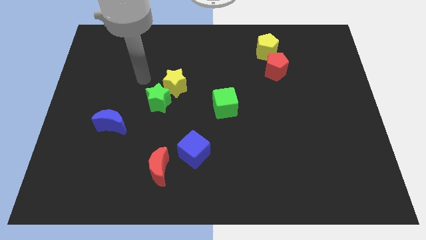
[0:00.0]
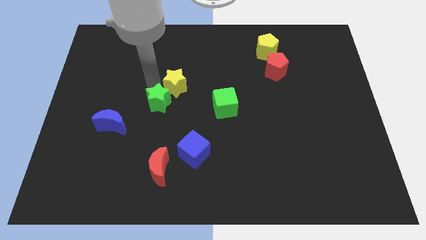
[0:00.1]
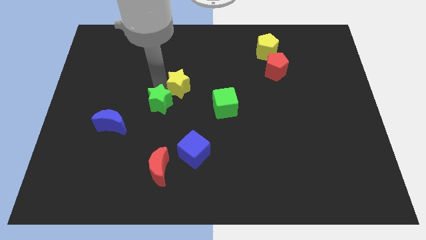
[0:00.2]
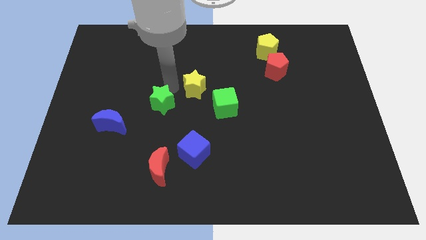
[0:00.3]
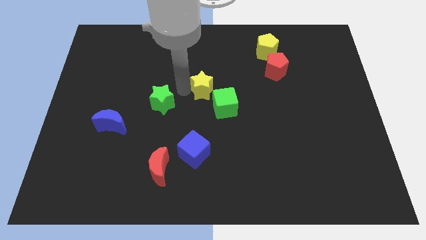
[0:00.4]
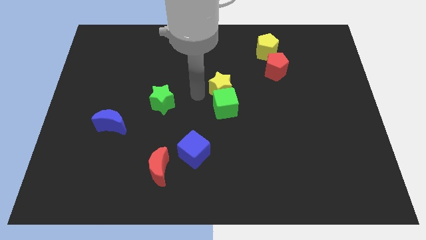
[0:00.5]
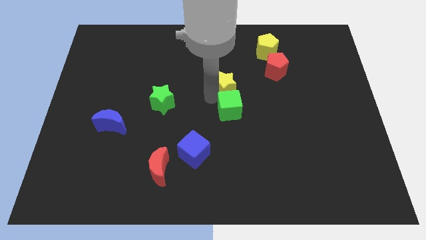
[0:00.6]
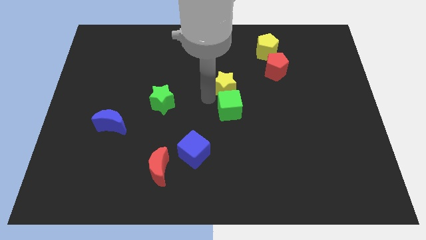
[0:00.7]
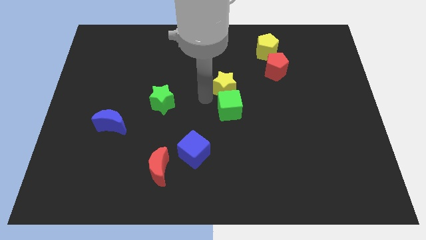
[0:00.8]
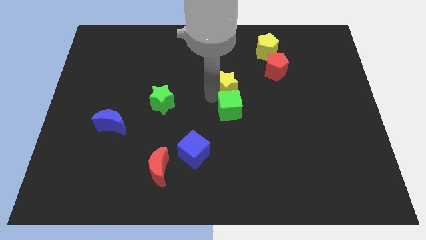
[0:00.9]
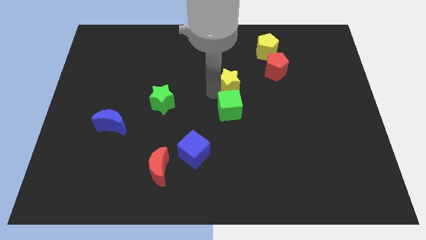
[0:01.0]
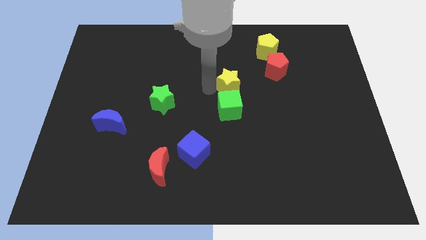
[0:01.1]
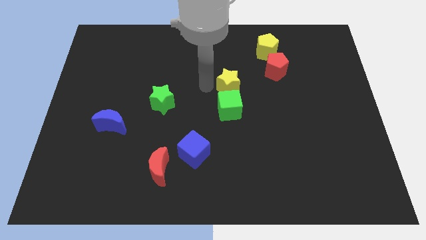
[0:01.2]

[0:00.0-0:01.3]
move the yellow star to the top side of the green cube

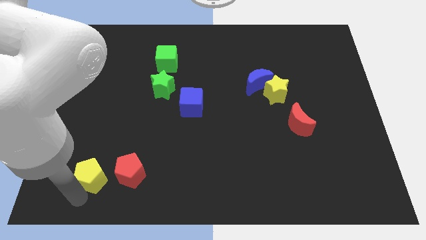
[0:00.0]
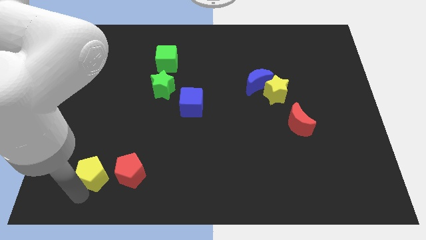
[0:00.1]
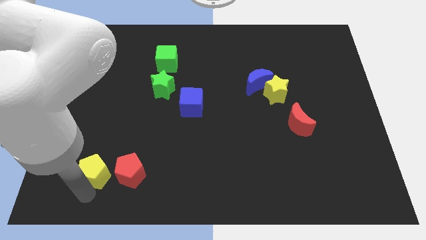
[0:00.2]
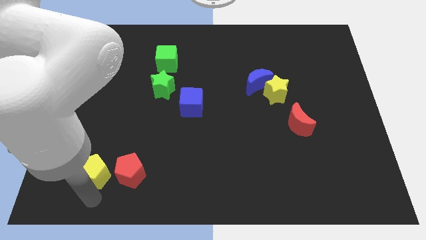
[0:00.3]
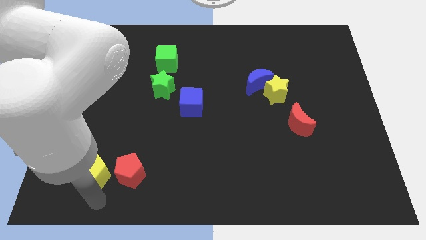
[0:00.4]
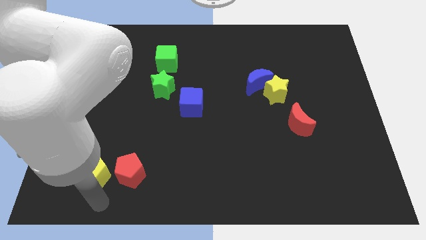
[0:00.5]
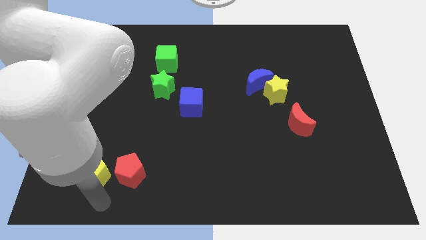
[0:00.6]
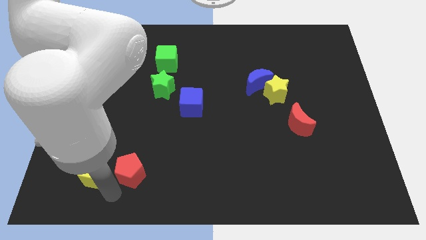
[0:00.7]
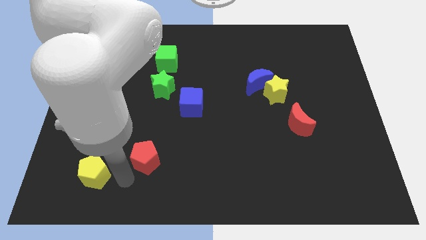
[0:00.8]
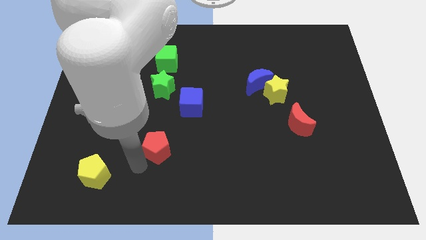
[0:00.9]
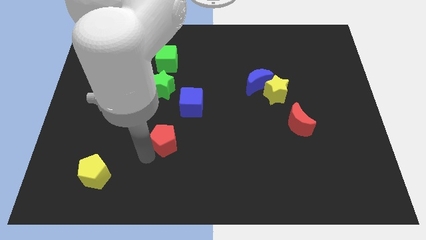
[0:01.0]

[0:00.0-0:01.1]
push red pentagon below green star

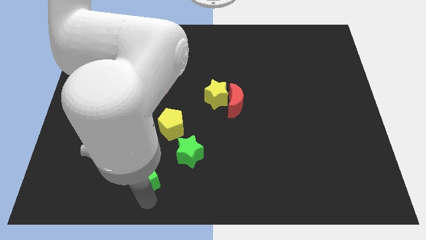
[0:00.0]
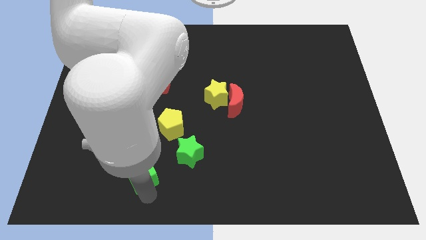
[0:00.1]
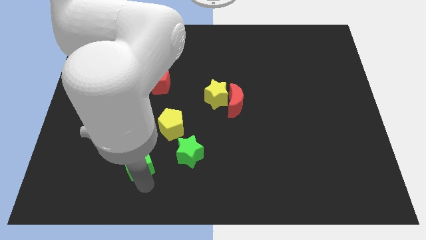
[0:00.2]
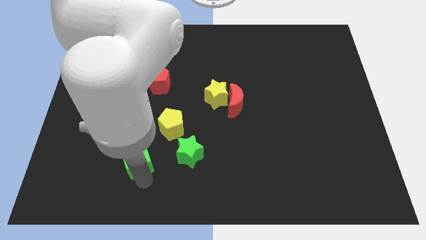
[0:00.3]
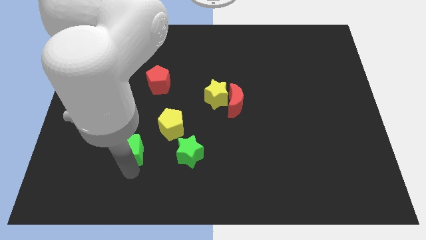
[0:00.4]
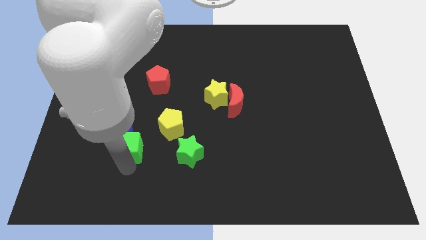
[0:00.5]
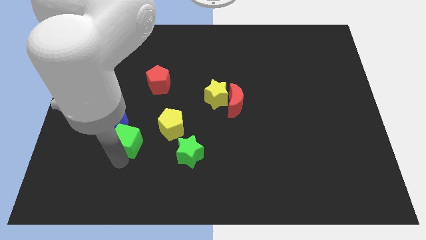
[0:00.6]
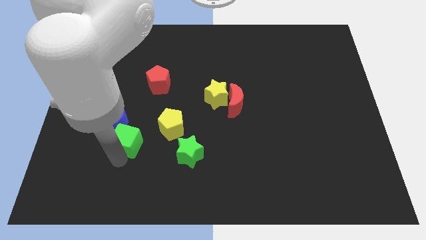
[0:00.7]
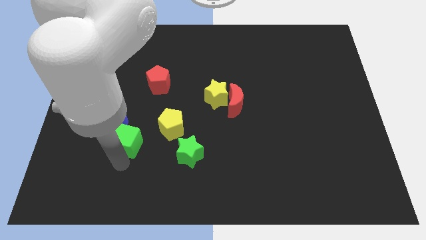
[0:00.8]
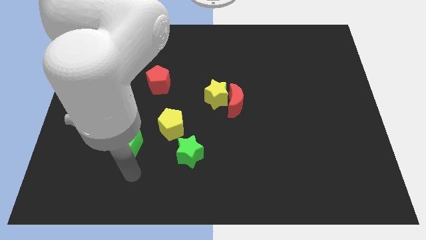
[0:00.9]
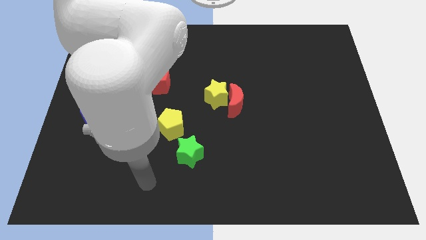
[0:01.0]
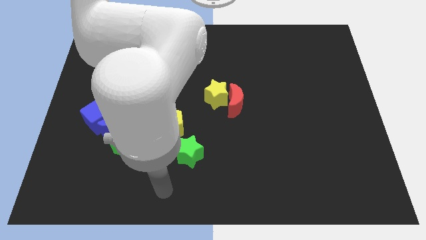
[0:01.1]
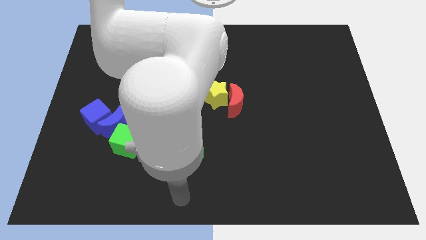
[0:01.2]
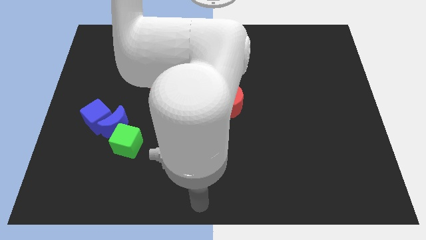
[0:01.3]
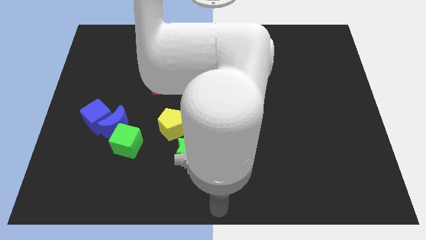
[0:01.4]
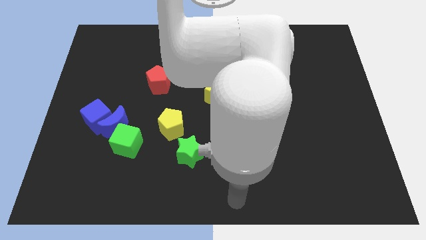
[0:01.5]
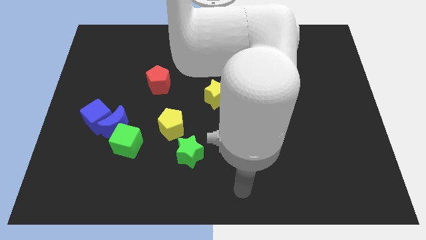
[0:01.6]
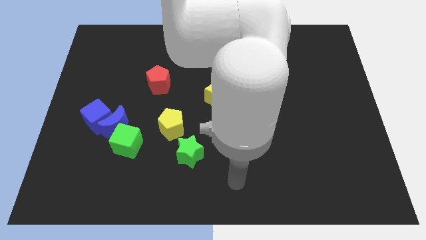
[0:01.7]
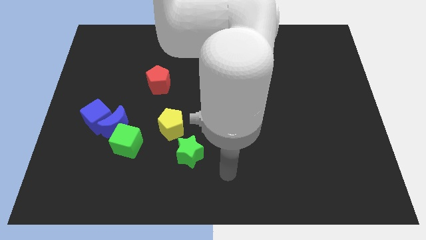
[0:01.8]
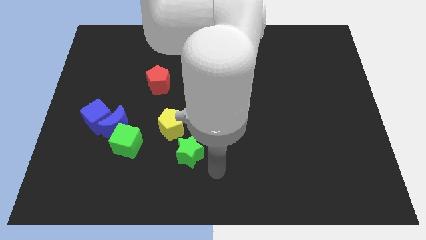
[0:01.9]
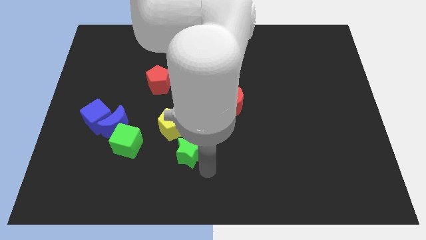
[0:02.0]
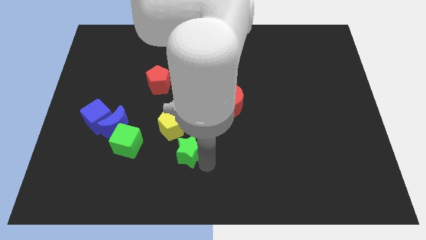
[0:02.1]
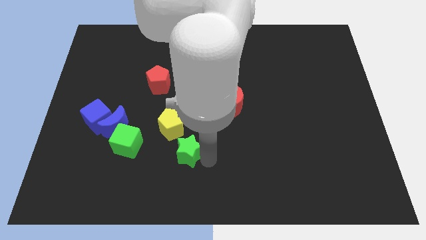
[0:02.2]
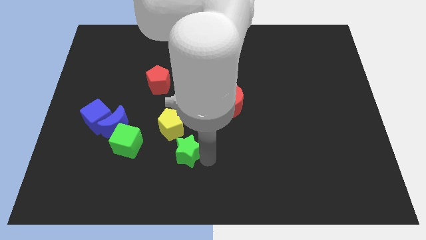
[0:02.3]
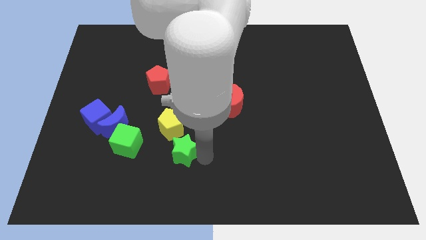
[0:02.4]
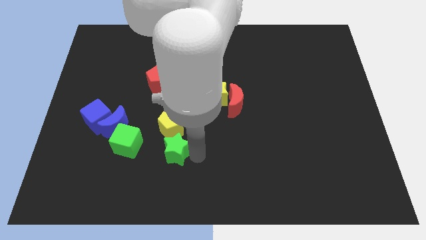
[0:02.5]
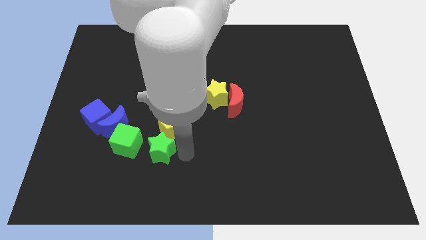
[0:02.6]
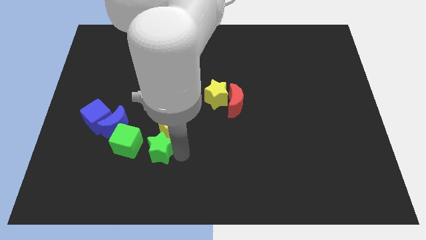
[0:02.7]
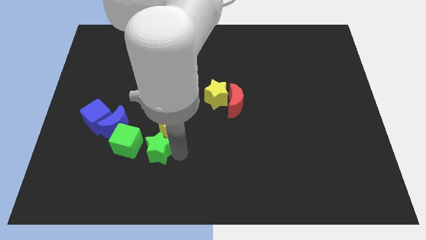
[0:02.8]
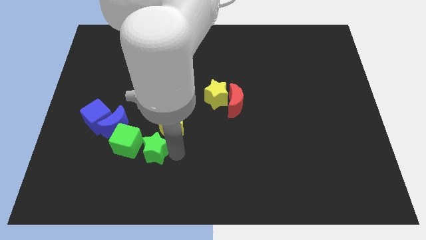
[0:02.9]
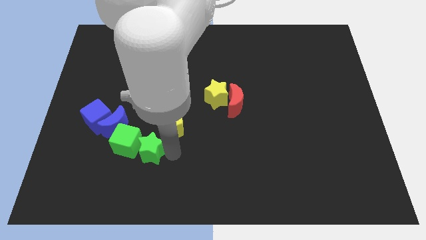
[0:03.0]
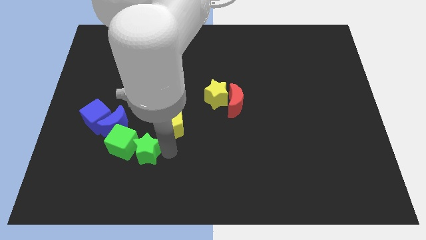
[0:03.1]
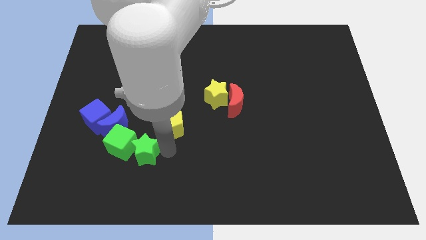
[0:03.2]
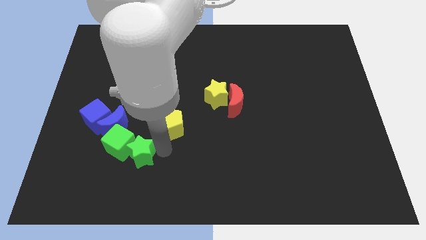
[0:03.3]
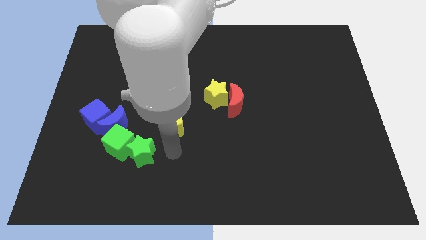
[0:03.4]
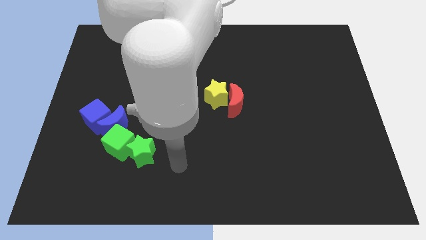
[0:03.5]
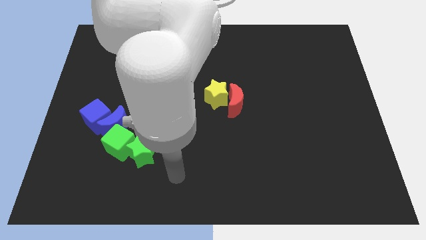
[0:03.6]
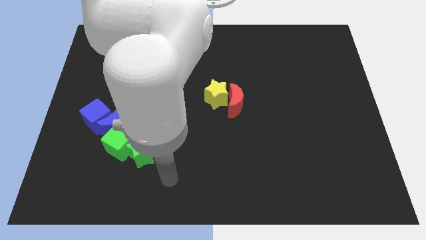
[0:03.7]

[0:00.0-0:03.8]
push the green star right to the green cube

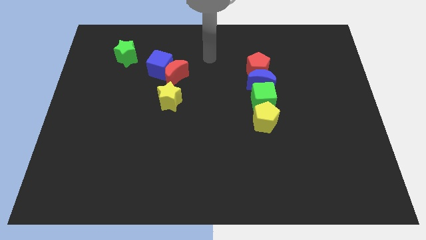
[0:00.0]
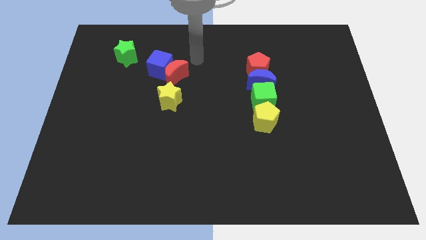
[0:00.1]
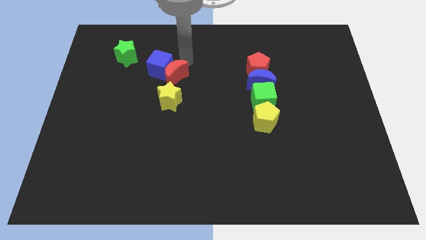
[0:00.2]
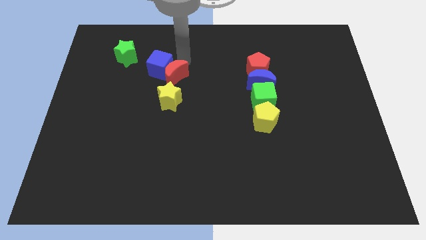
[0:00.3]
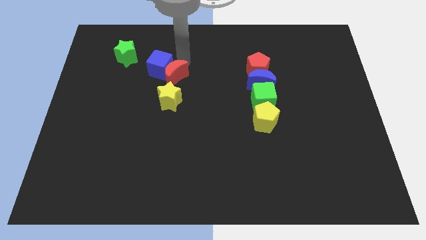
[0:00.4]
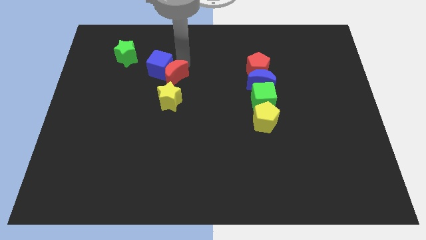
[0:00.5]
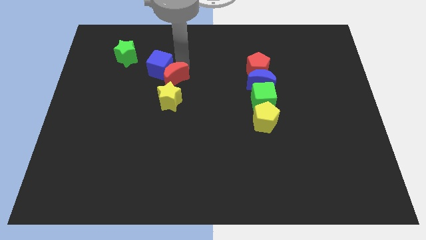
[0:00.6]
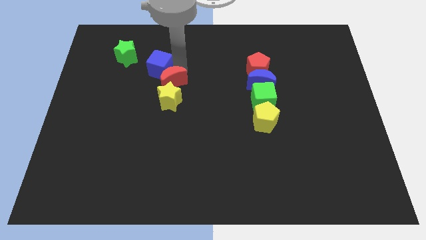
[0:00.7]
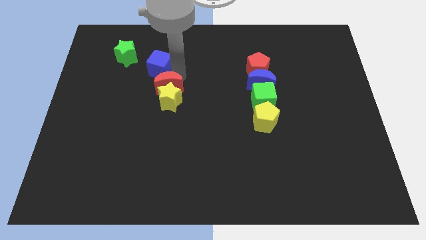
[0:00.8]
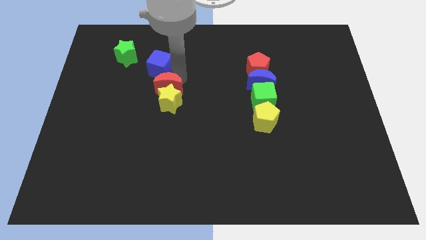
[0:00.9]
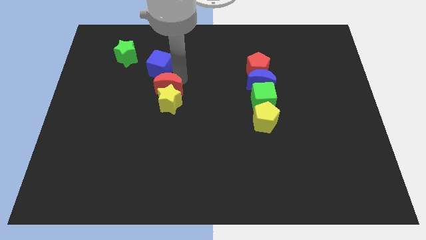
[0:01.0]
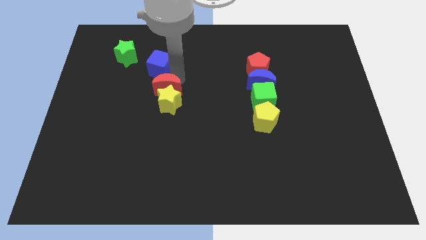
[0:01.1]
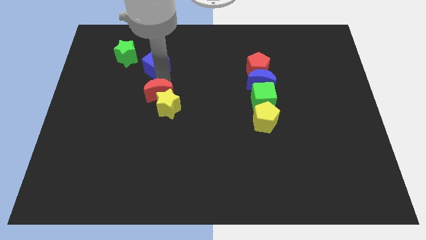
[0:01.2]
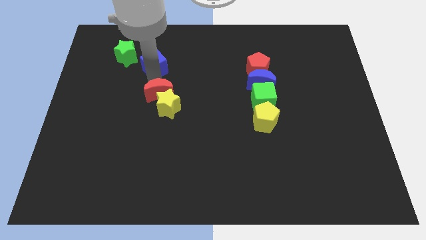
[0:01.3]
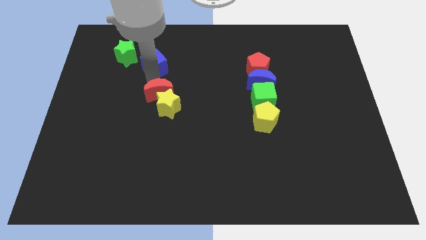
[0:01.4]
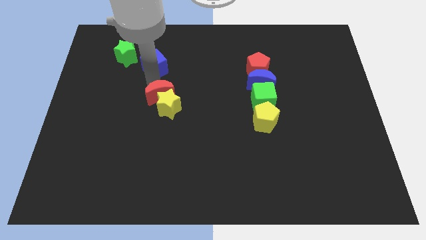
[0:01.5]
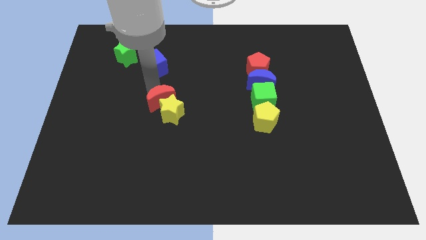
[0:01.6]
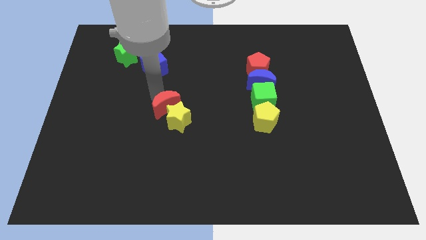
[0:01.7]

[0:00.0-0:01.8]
push the red crescent and yellow star together to the left side of the yellow pentagon

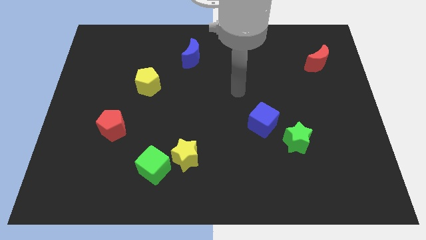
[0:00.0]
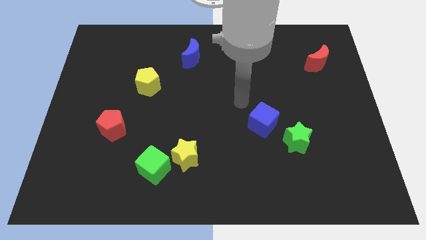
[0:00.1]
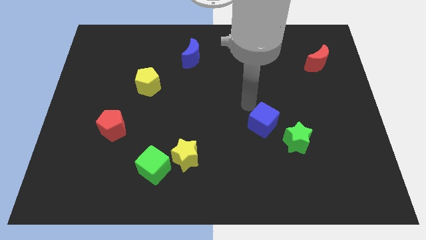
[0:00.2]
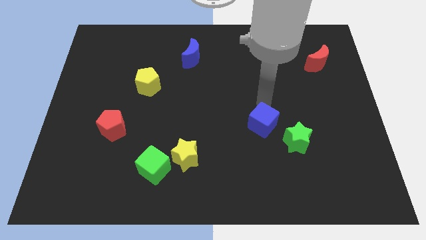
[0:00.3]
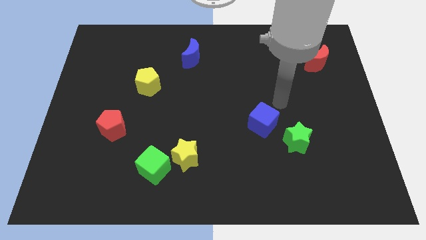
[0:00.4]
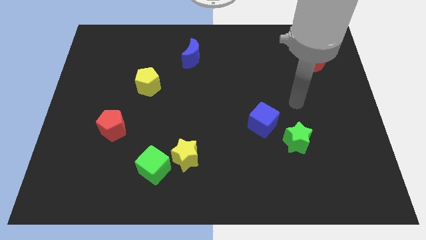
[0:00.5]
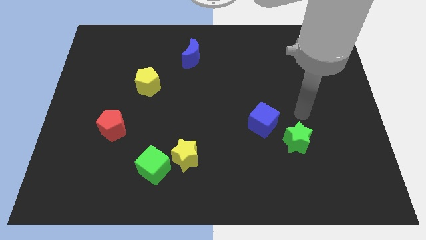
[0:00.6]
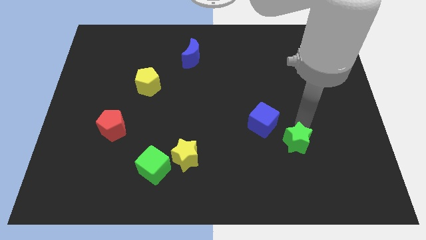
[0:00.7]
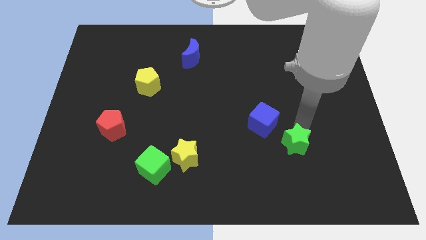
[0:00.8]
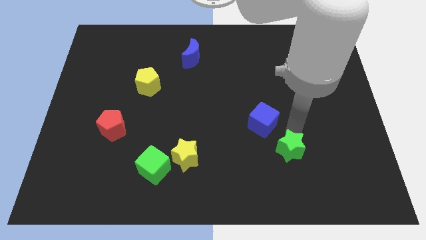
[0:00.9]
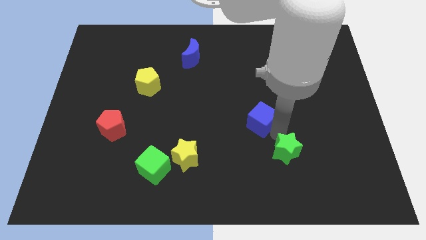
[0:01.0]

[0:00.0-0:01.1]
push the green star slightly
